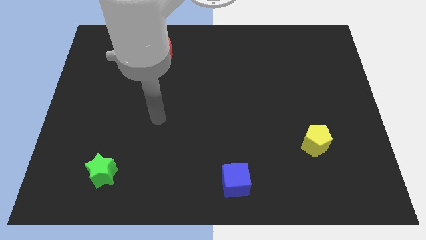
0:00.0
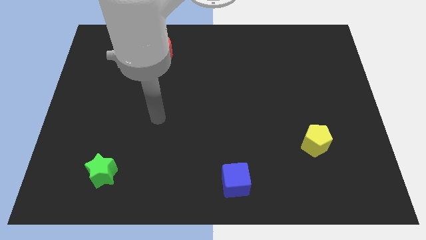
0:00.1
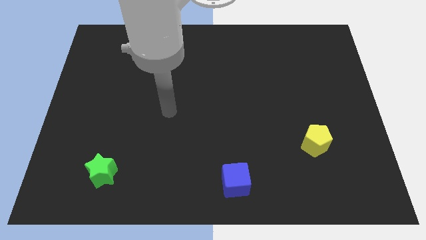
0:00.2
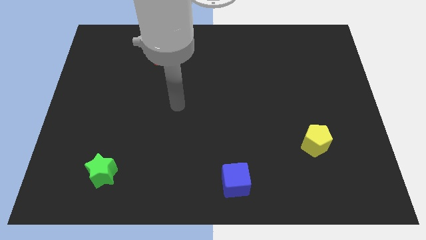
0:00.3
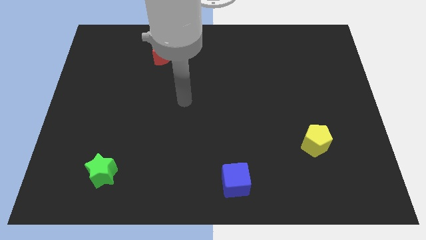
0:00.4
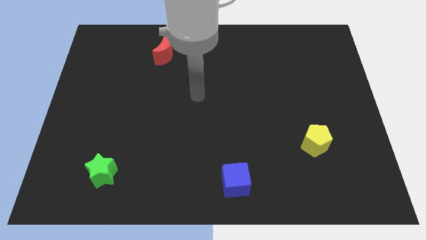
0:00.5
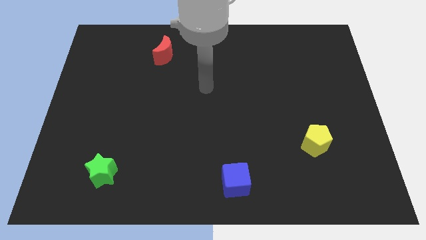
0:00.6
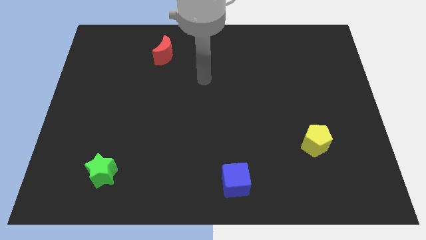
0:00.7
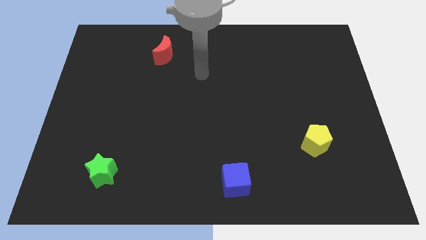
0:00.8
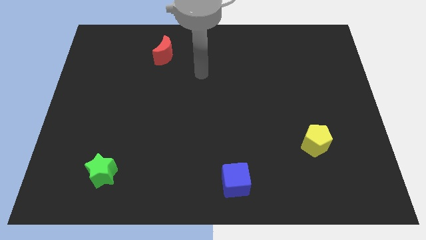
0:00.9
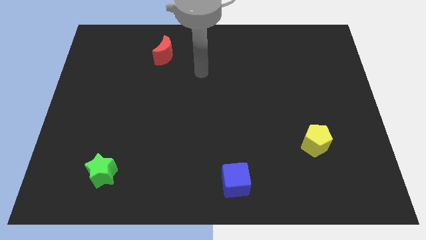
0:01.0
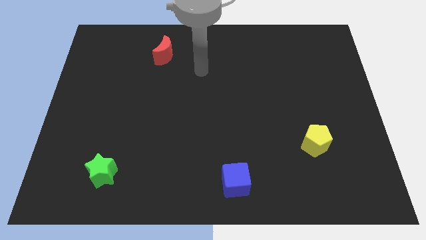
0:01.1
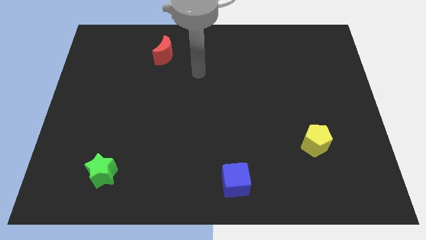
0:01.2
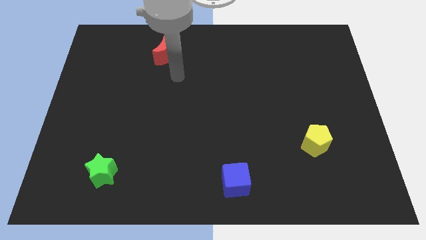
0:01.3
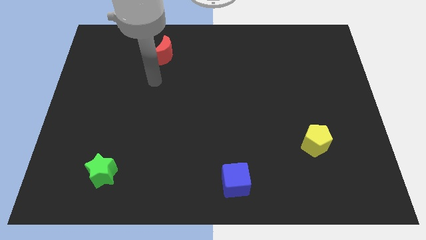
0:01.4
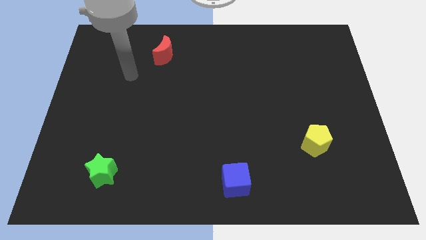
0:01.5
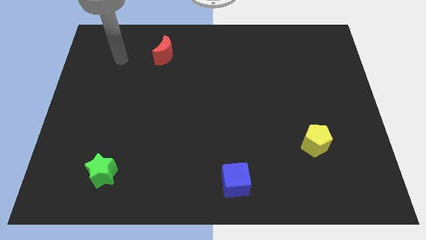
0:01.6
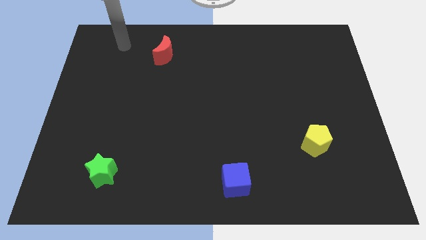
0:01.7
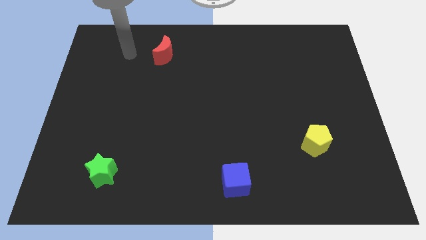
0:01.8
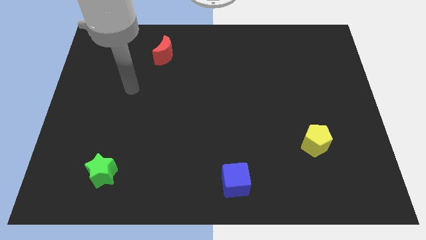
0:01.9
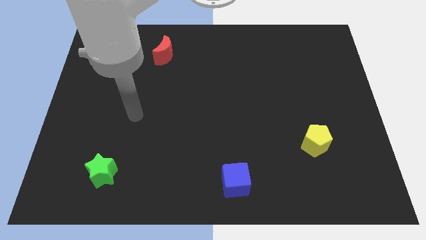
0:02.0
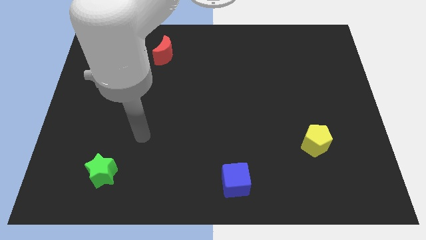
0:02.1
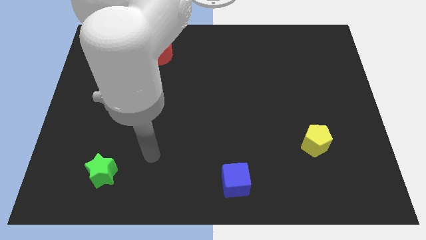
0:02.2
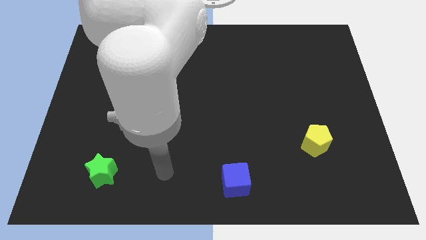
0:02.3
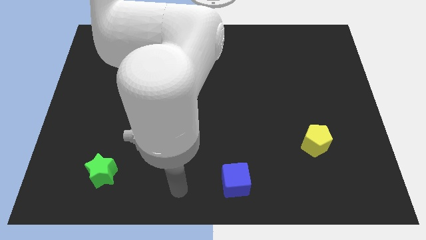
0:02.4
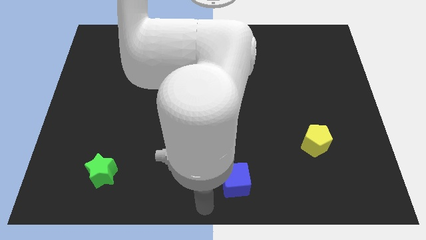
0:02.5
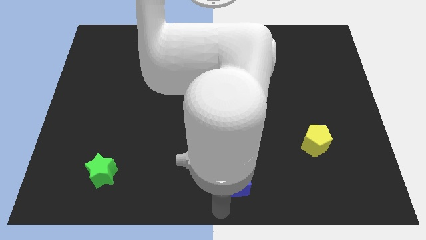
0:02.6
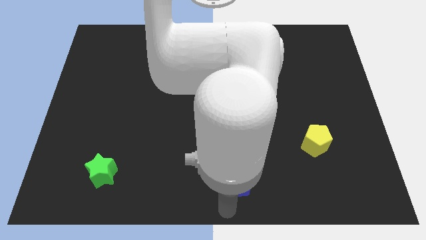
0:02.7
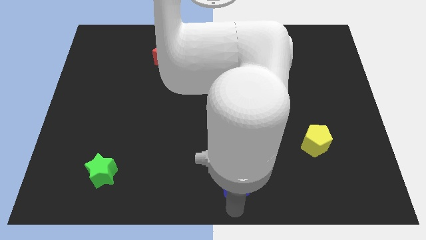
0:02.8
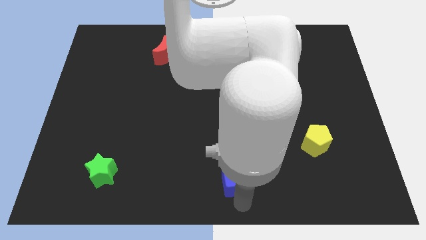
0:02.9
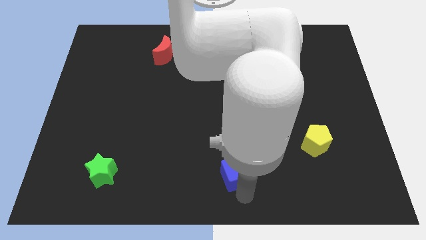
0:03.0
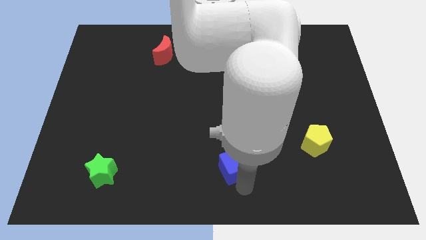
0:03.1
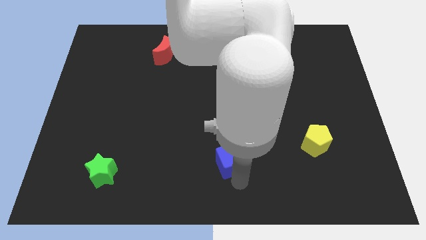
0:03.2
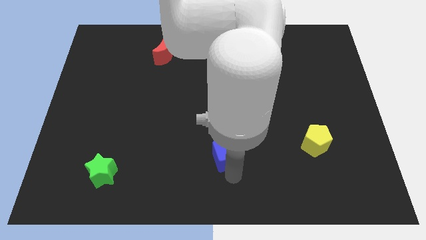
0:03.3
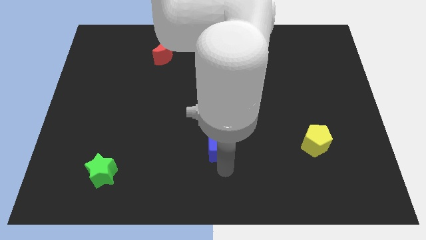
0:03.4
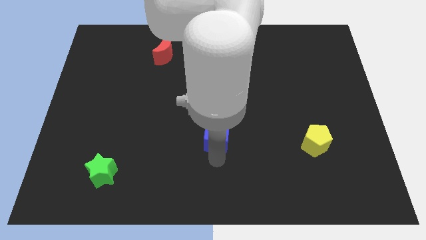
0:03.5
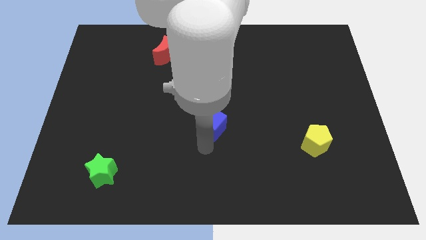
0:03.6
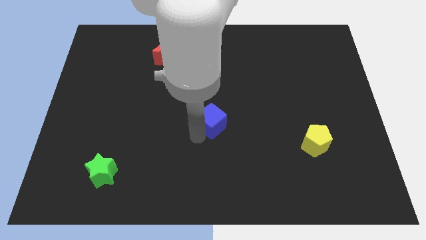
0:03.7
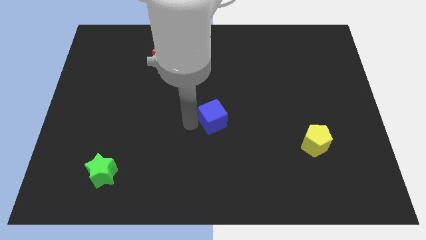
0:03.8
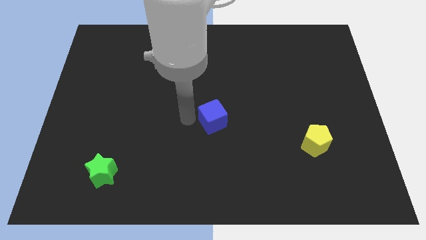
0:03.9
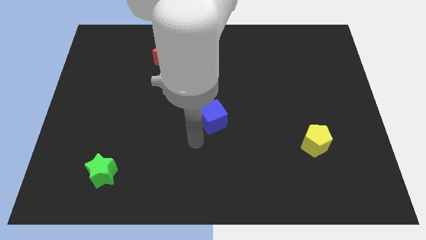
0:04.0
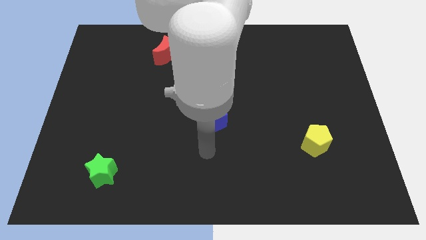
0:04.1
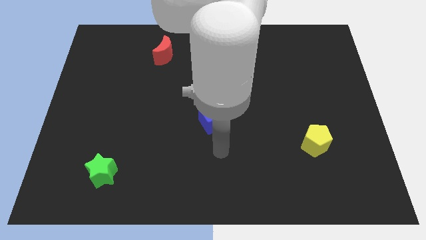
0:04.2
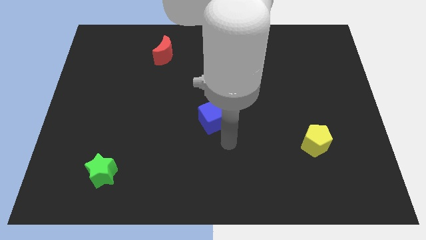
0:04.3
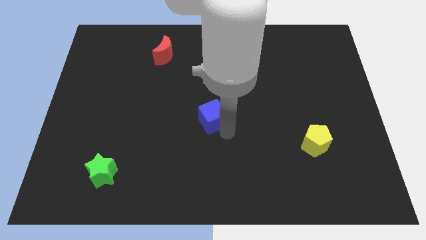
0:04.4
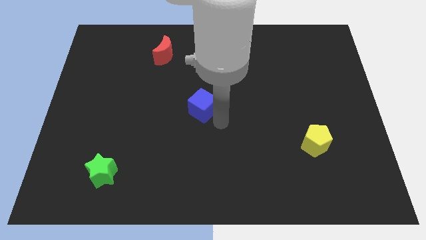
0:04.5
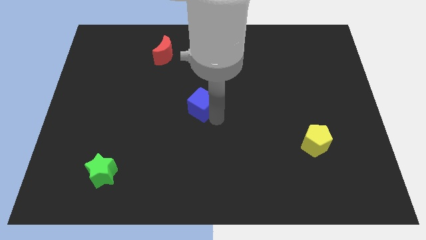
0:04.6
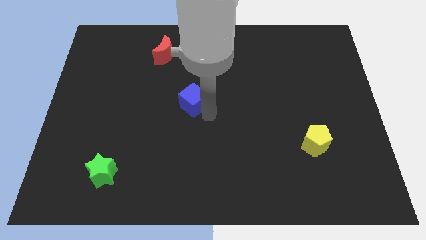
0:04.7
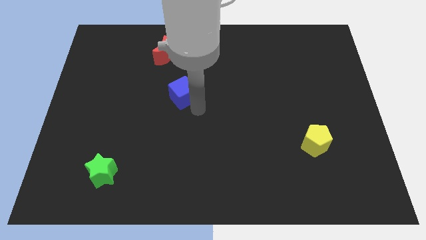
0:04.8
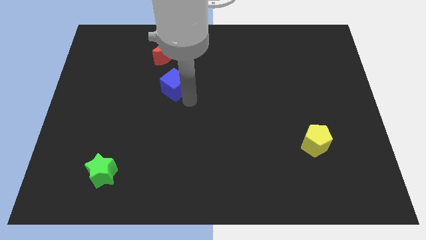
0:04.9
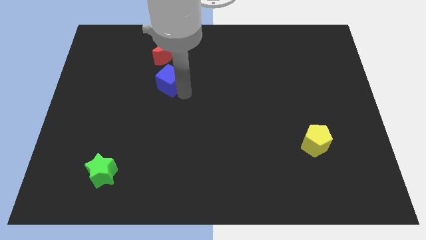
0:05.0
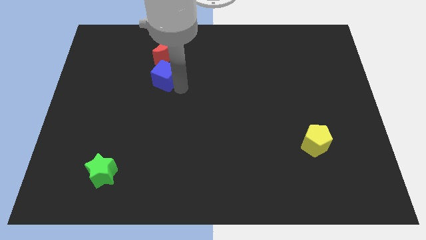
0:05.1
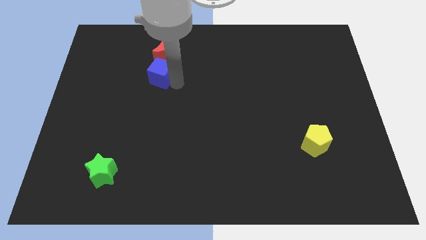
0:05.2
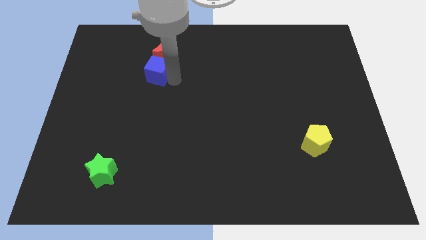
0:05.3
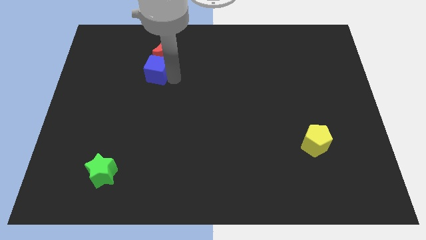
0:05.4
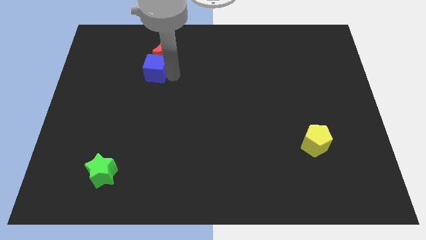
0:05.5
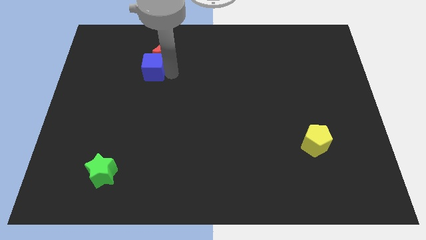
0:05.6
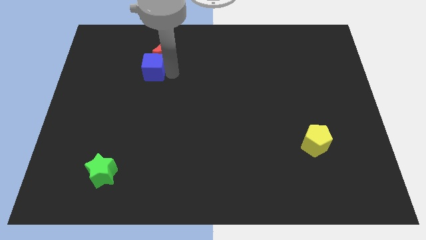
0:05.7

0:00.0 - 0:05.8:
move the blue block close to the moon

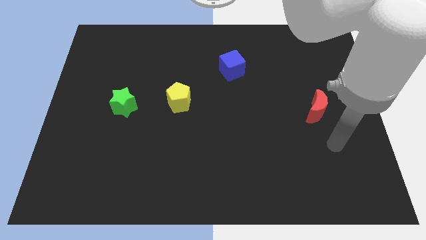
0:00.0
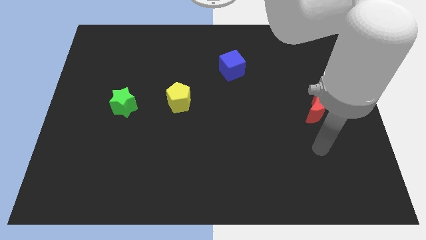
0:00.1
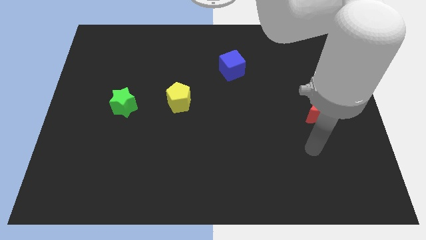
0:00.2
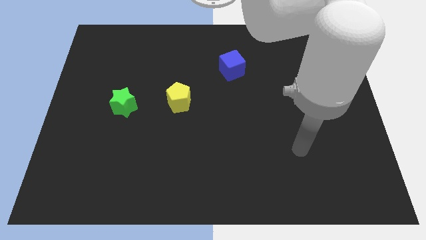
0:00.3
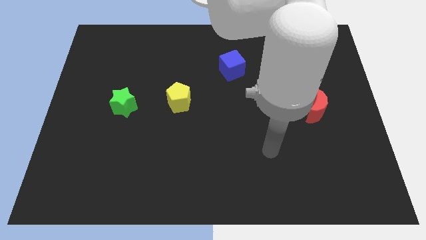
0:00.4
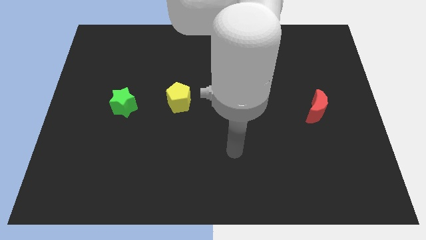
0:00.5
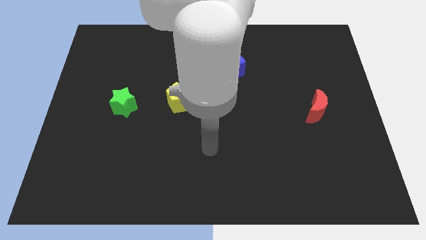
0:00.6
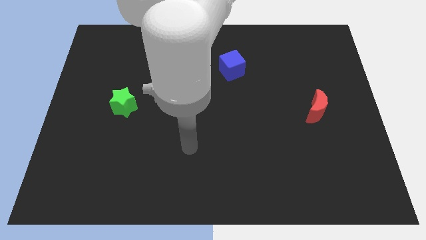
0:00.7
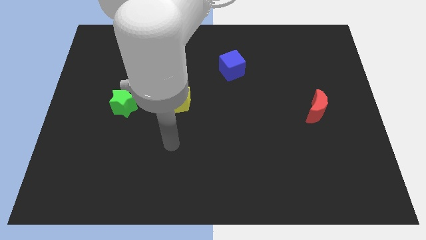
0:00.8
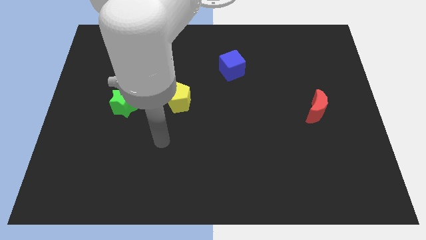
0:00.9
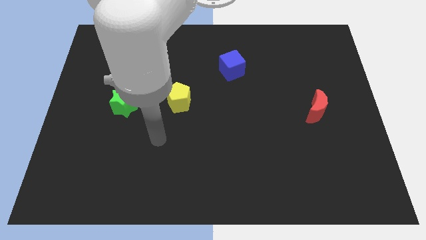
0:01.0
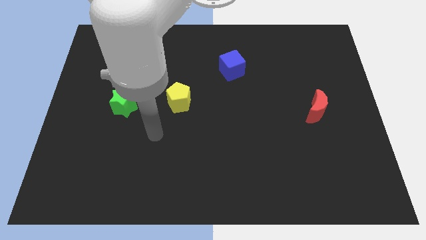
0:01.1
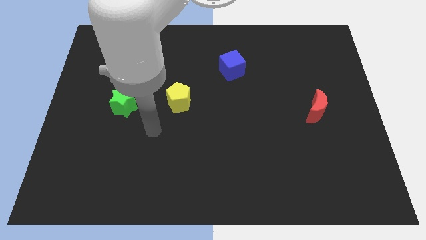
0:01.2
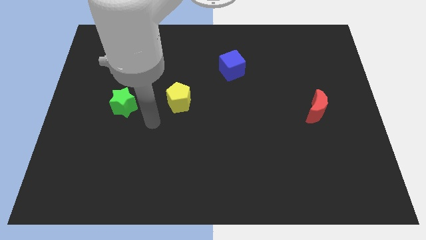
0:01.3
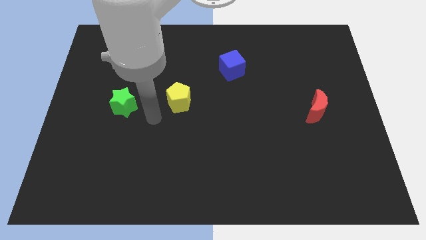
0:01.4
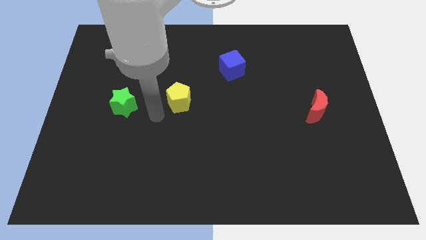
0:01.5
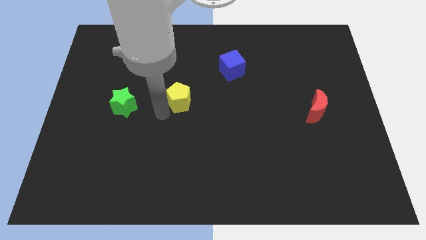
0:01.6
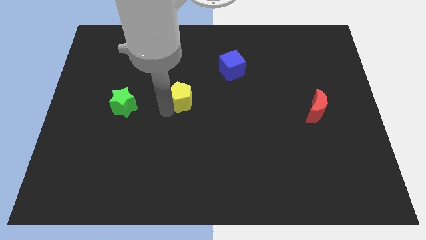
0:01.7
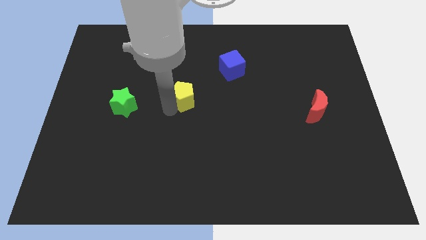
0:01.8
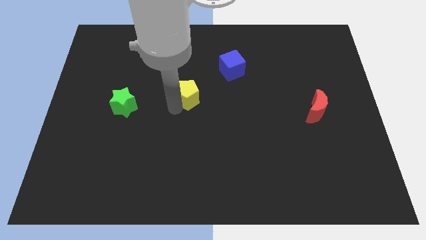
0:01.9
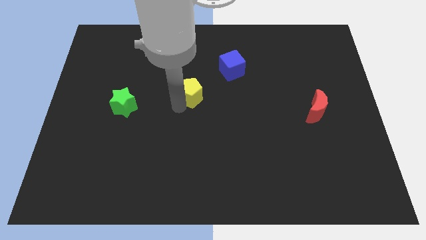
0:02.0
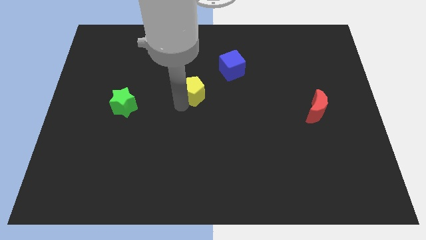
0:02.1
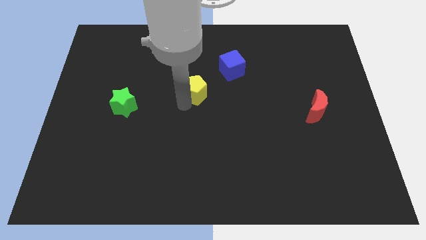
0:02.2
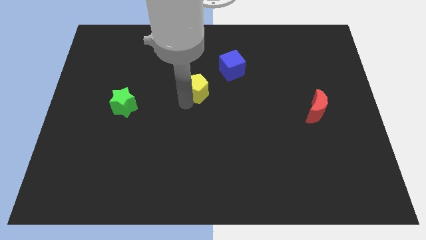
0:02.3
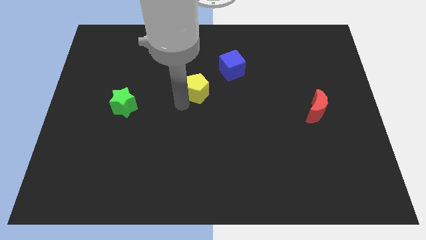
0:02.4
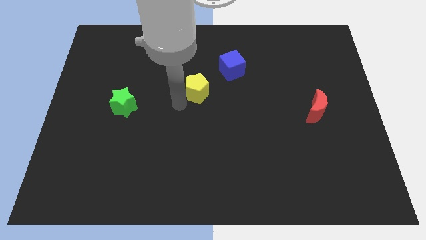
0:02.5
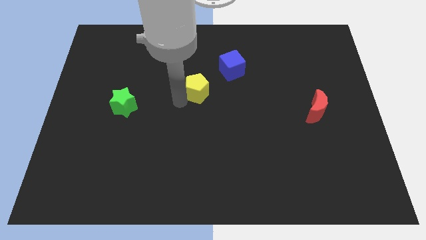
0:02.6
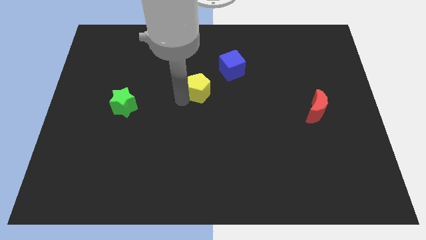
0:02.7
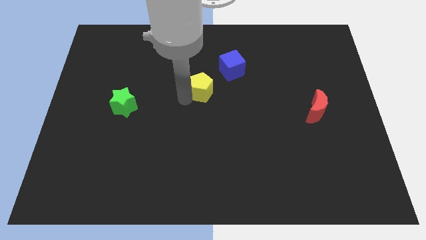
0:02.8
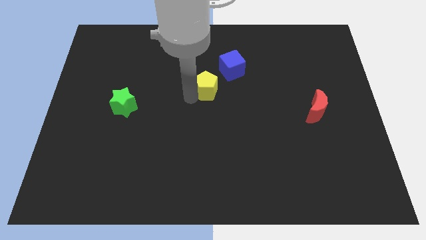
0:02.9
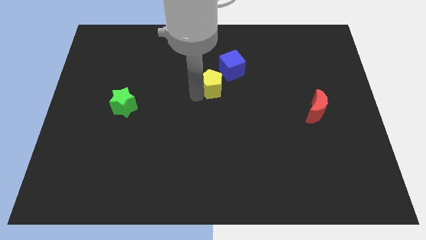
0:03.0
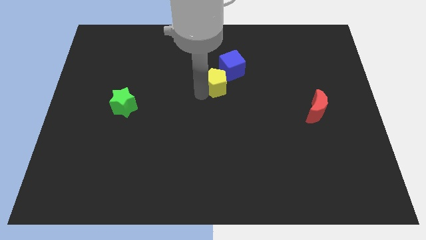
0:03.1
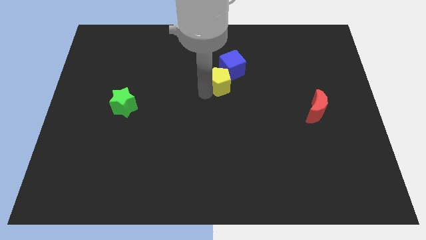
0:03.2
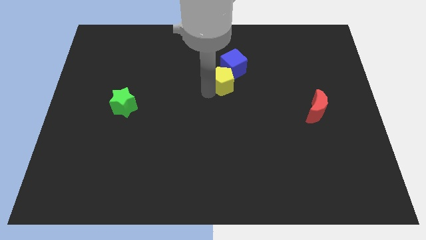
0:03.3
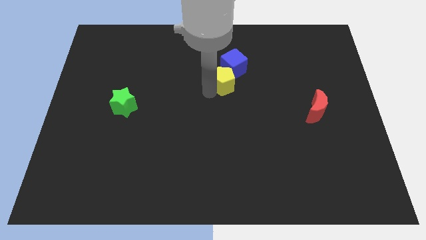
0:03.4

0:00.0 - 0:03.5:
move the yellow block towards the cube
